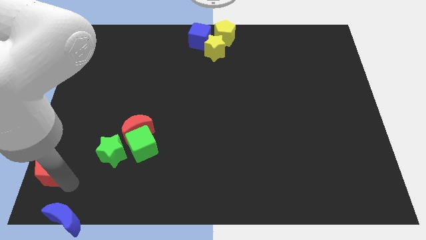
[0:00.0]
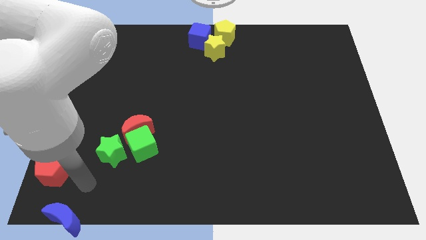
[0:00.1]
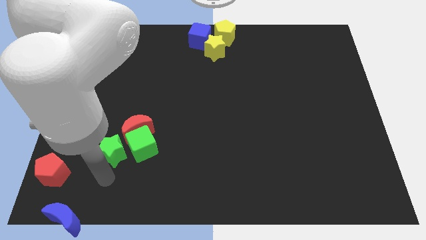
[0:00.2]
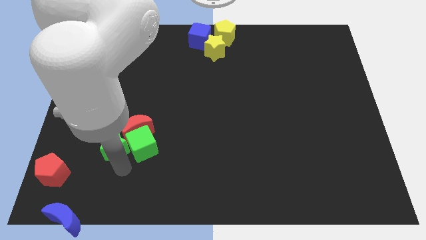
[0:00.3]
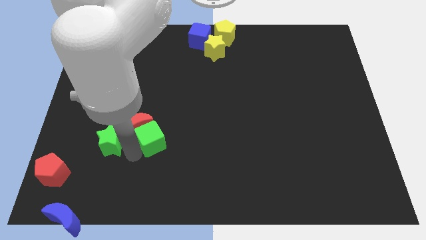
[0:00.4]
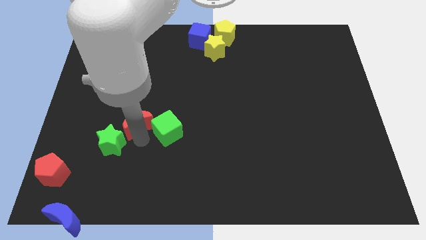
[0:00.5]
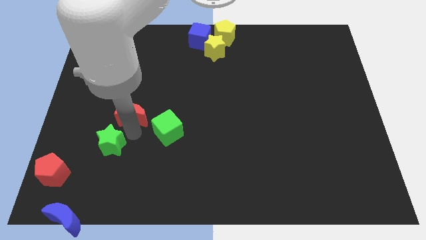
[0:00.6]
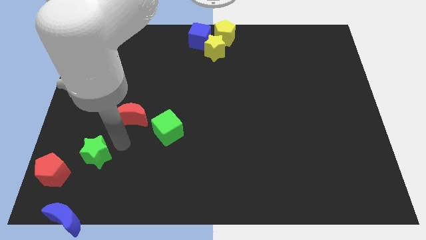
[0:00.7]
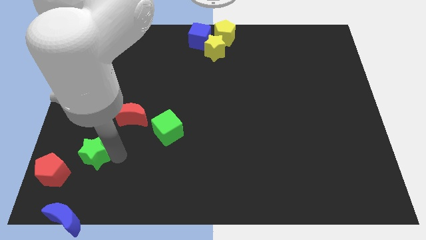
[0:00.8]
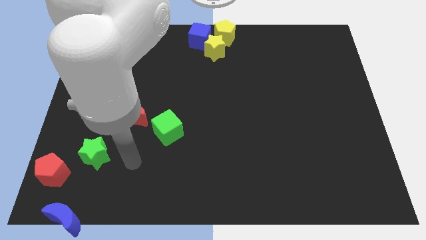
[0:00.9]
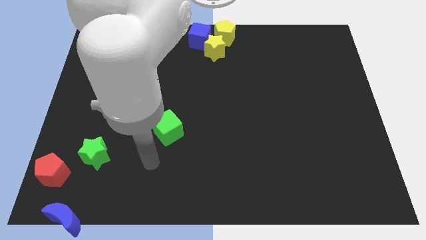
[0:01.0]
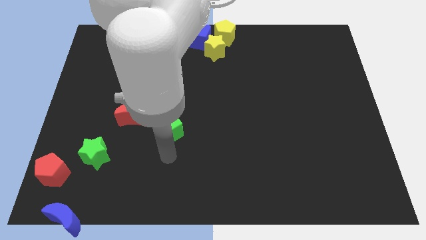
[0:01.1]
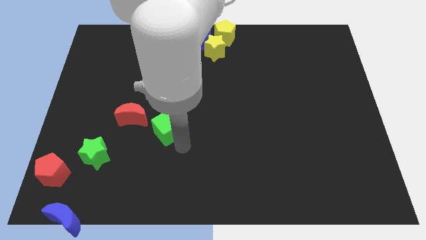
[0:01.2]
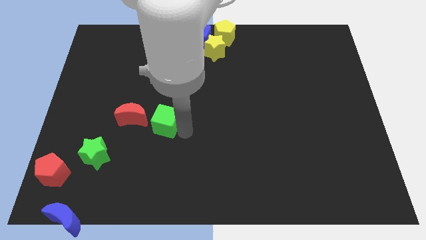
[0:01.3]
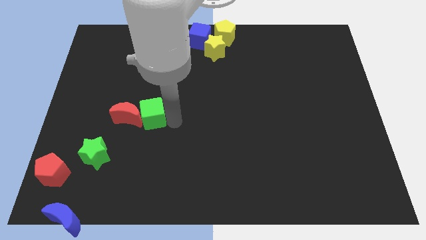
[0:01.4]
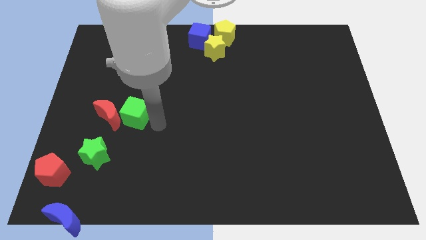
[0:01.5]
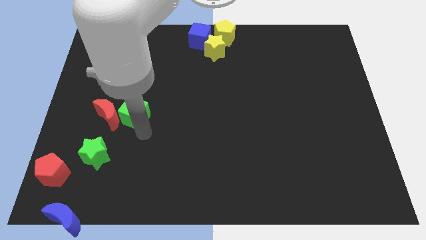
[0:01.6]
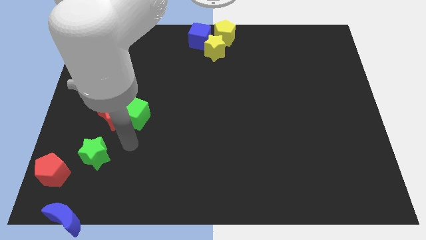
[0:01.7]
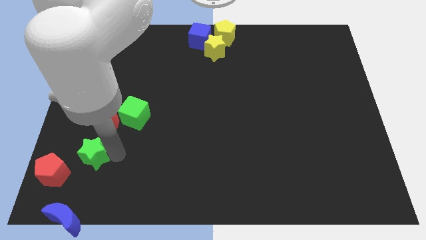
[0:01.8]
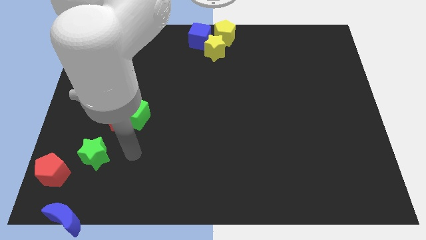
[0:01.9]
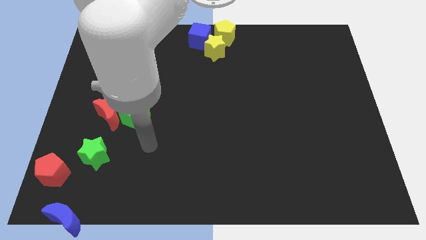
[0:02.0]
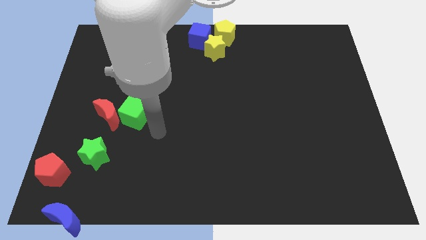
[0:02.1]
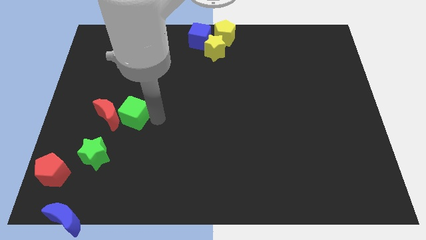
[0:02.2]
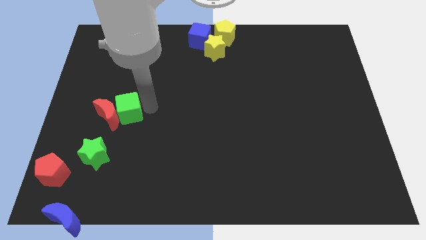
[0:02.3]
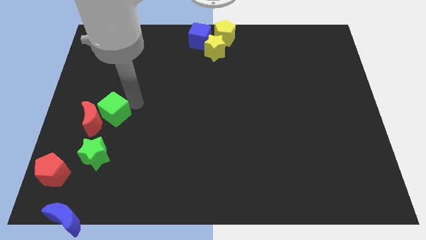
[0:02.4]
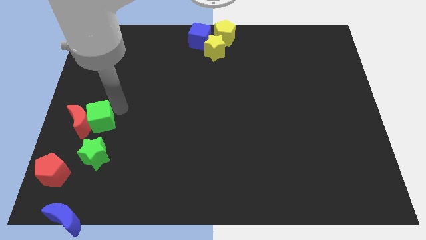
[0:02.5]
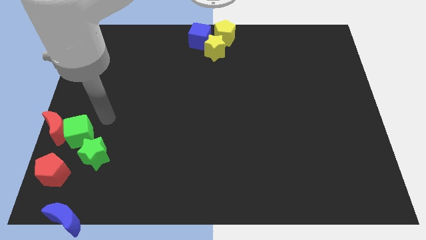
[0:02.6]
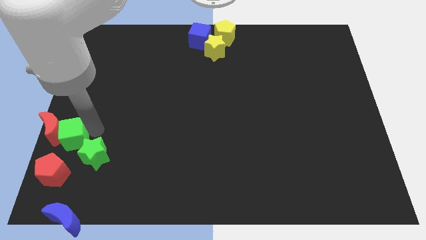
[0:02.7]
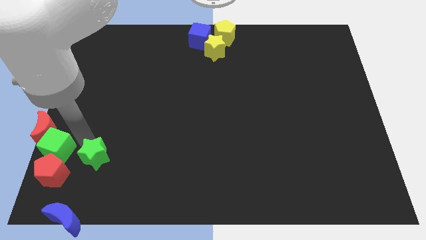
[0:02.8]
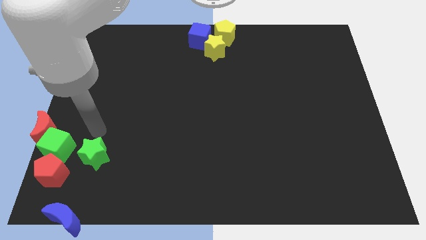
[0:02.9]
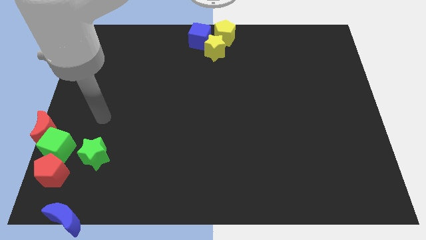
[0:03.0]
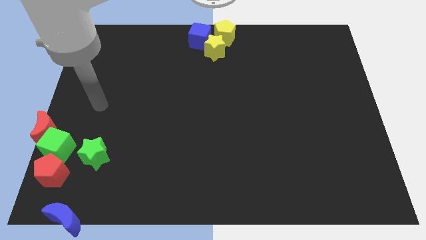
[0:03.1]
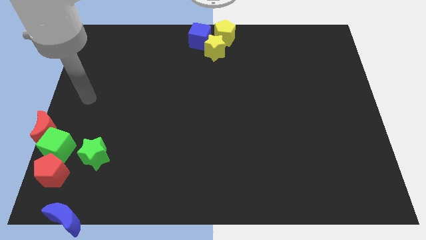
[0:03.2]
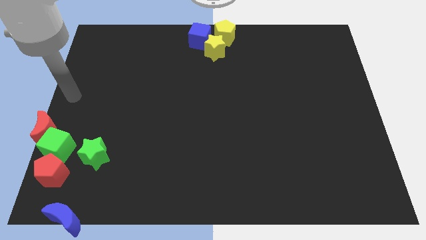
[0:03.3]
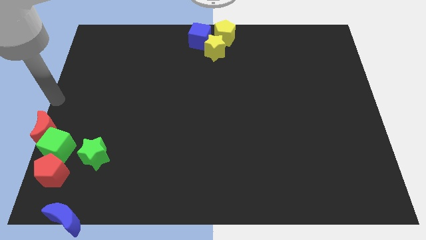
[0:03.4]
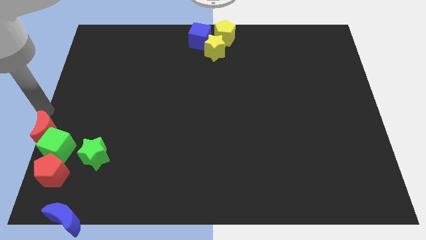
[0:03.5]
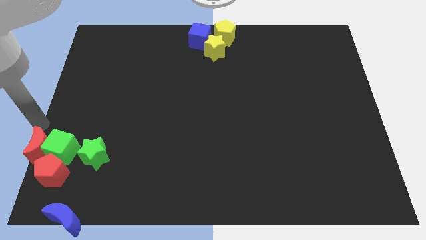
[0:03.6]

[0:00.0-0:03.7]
move the red crescent and green cube into the top side of the red pentagon

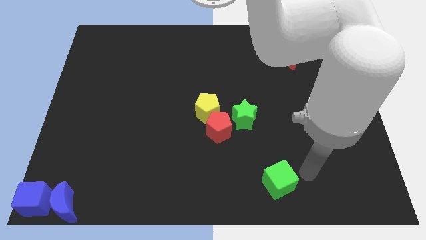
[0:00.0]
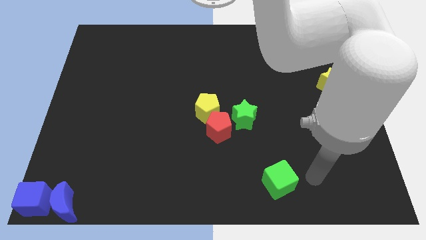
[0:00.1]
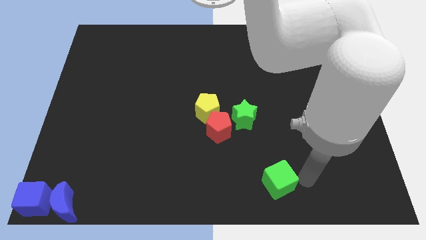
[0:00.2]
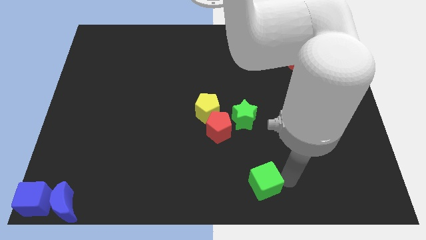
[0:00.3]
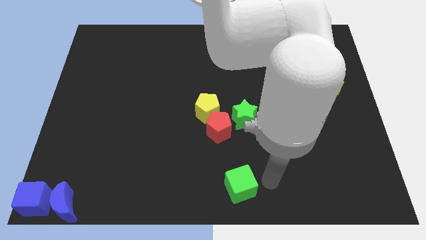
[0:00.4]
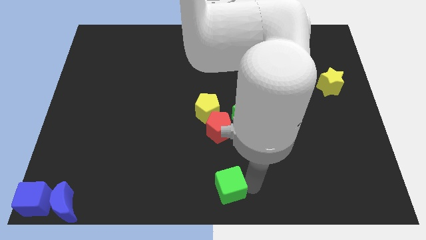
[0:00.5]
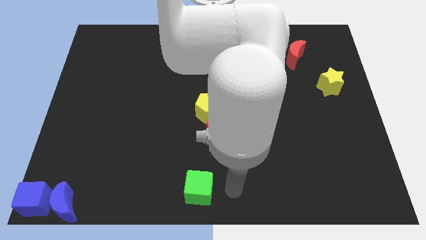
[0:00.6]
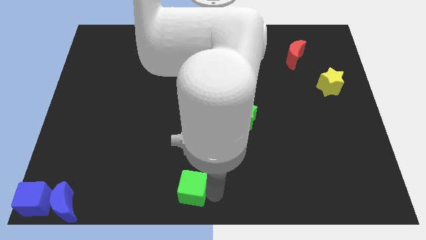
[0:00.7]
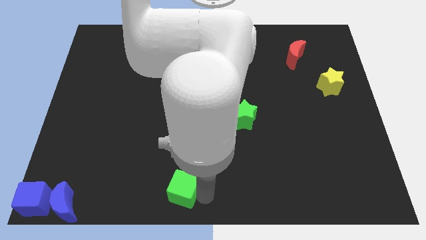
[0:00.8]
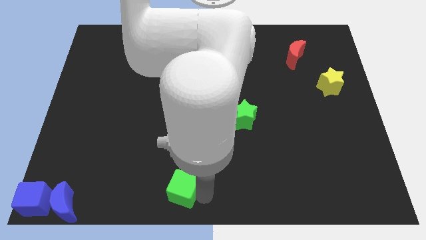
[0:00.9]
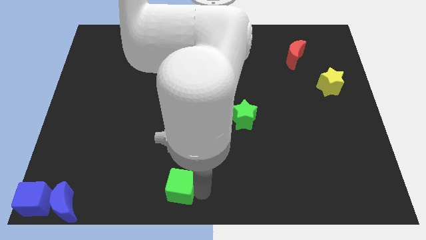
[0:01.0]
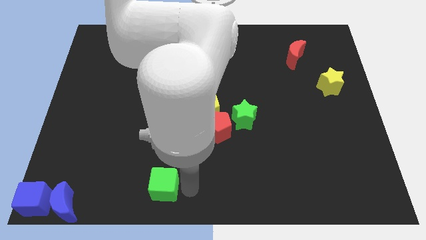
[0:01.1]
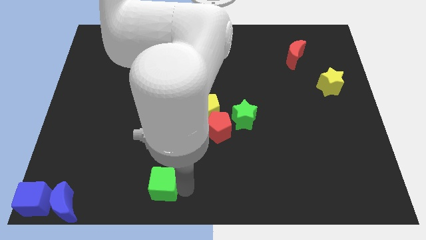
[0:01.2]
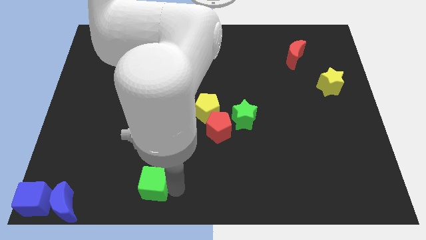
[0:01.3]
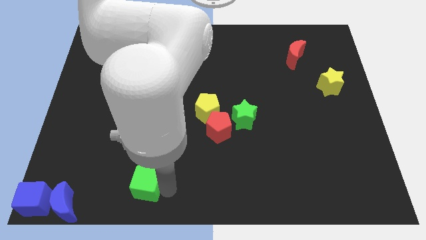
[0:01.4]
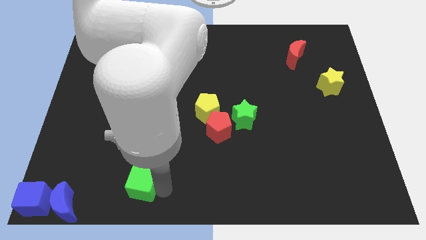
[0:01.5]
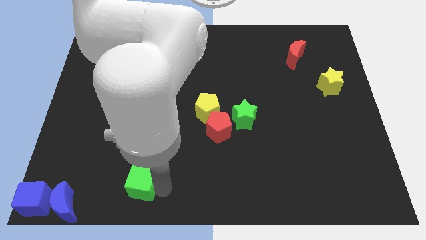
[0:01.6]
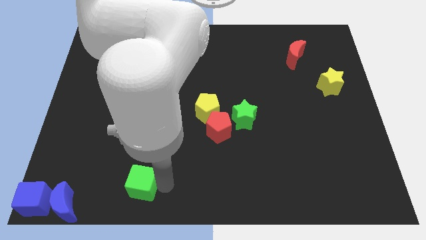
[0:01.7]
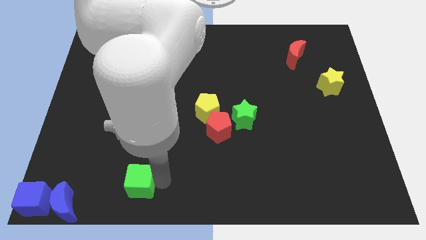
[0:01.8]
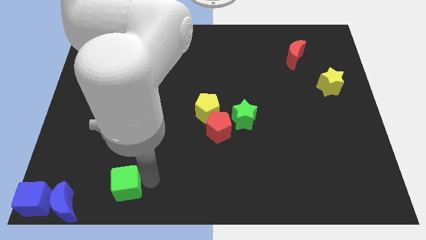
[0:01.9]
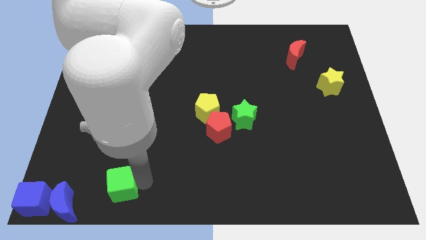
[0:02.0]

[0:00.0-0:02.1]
push the green cube towards the right side of the blue moon

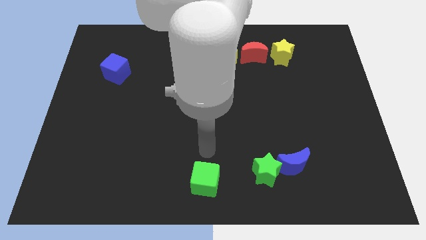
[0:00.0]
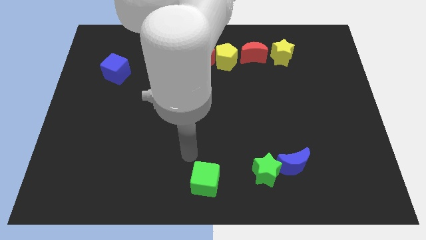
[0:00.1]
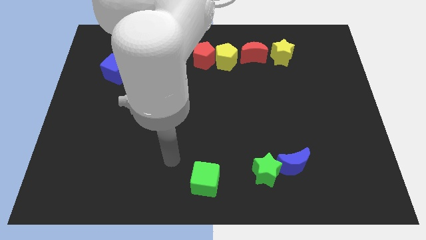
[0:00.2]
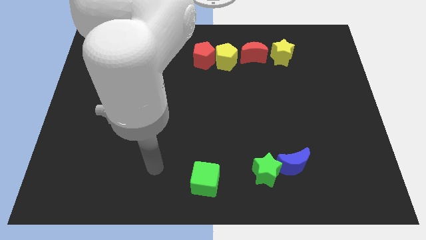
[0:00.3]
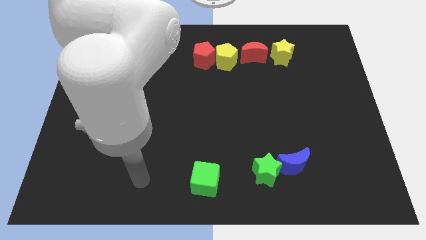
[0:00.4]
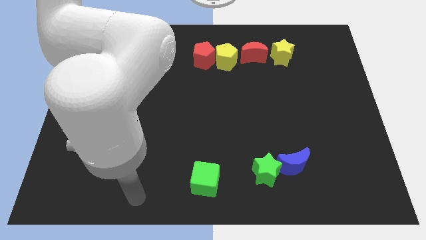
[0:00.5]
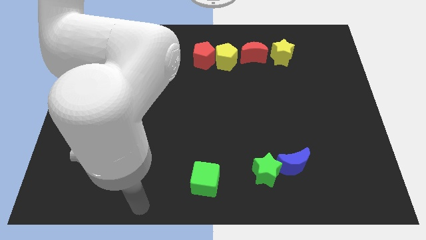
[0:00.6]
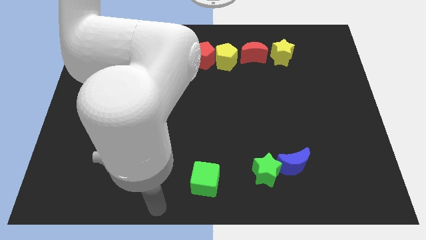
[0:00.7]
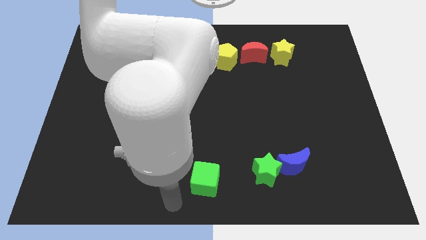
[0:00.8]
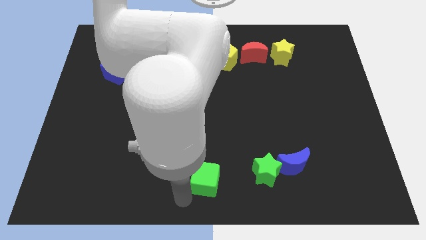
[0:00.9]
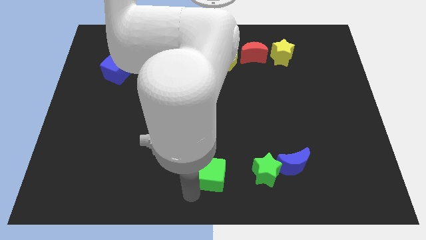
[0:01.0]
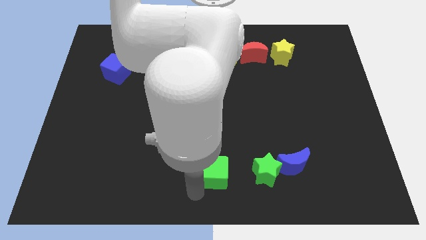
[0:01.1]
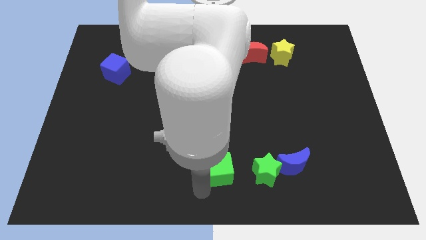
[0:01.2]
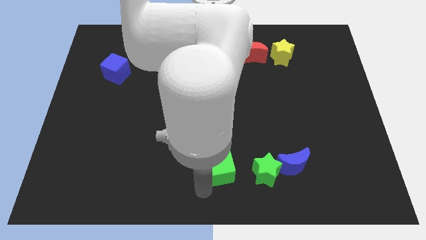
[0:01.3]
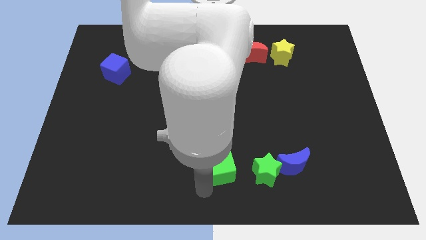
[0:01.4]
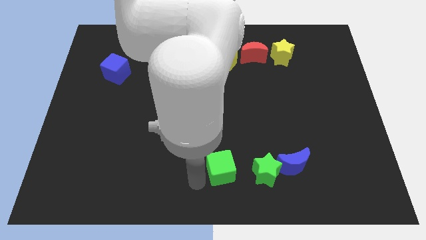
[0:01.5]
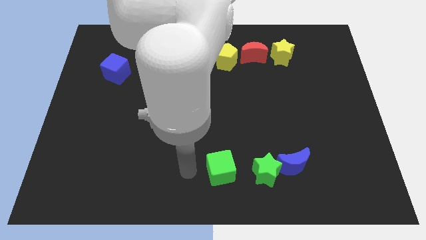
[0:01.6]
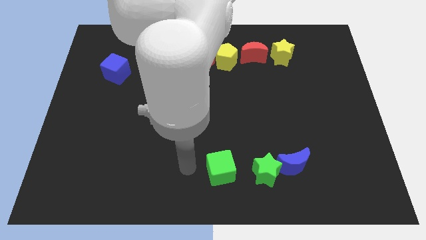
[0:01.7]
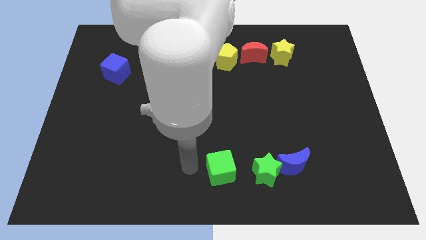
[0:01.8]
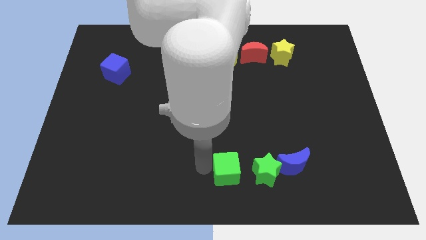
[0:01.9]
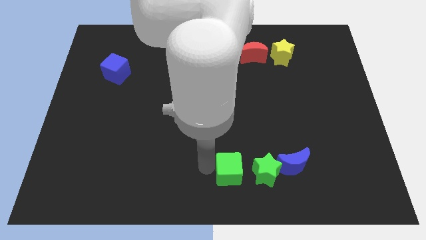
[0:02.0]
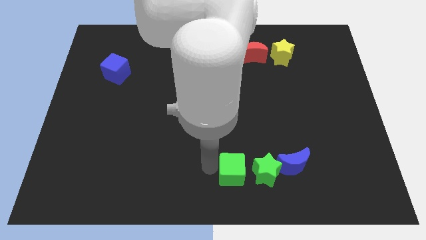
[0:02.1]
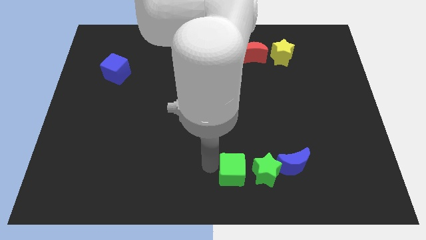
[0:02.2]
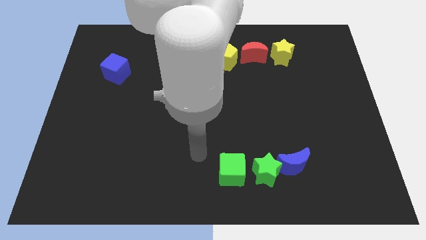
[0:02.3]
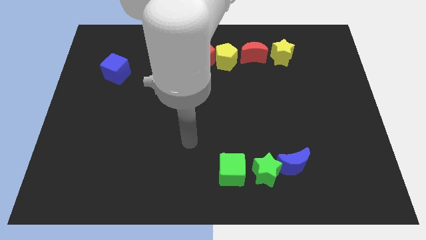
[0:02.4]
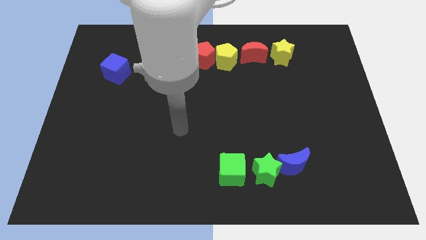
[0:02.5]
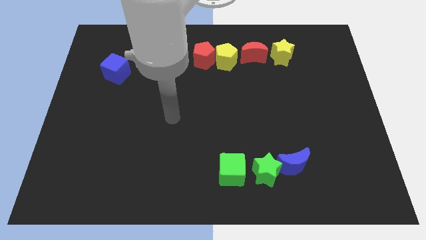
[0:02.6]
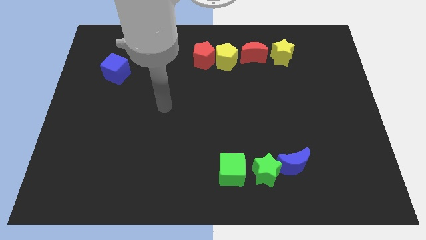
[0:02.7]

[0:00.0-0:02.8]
push the green cube left to the green star

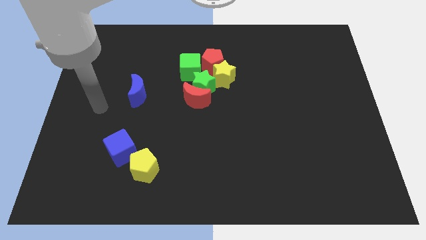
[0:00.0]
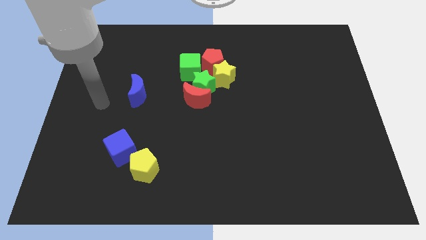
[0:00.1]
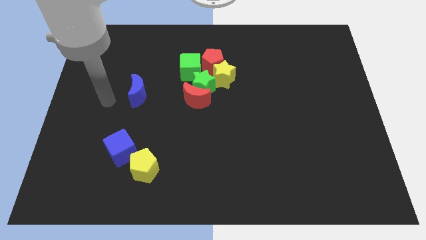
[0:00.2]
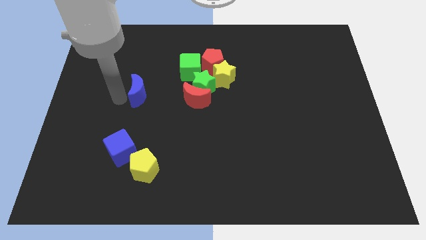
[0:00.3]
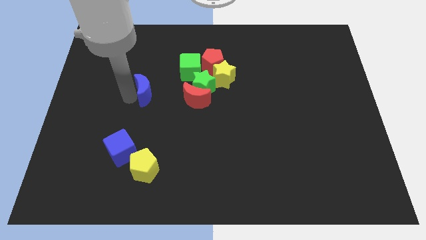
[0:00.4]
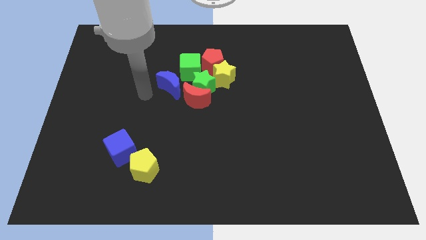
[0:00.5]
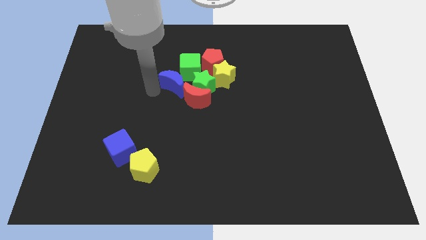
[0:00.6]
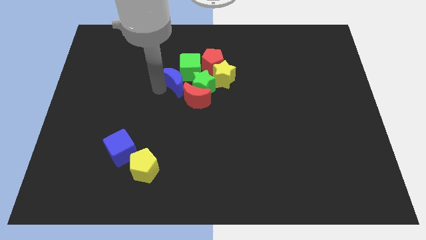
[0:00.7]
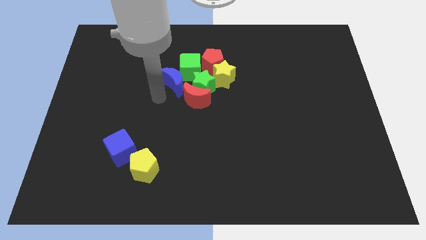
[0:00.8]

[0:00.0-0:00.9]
push the blue crescent into the green cube
